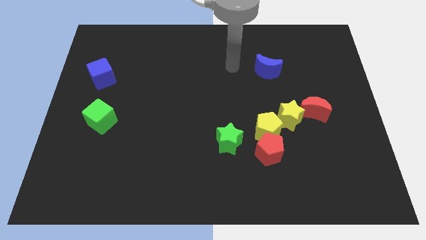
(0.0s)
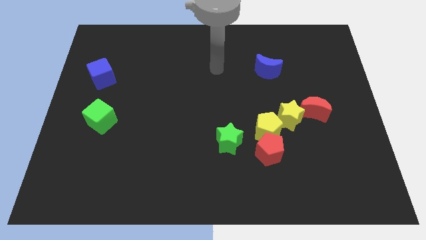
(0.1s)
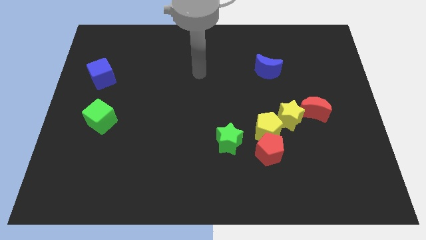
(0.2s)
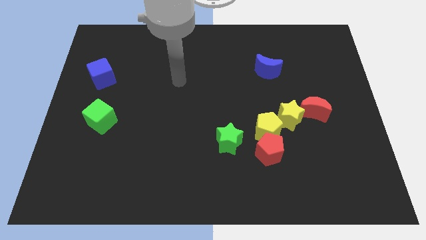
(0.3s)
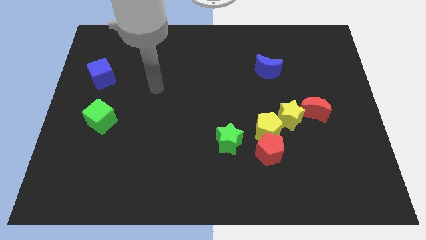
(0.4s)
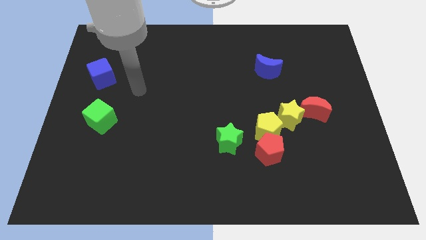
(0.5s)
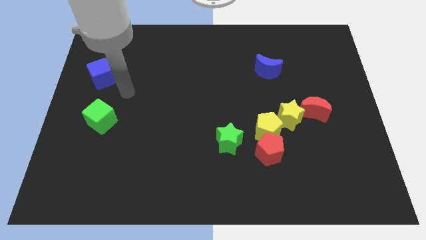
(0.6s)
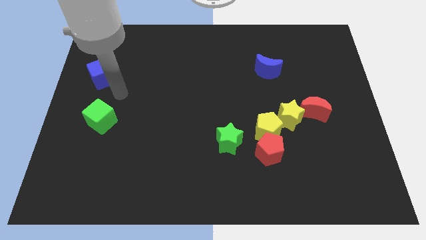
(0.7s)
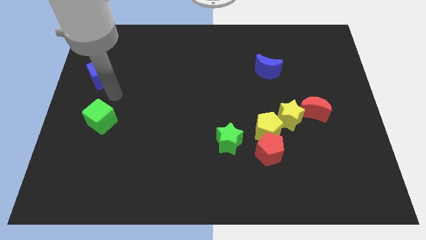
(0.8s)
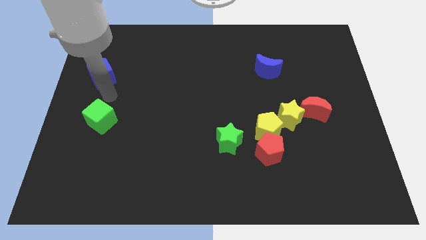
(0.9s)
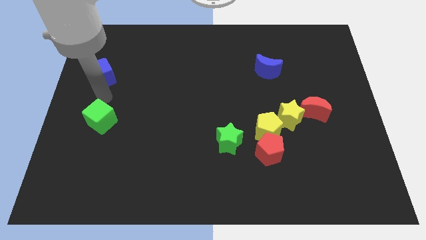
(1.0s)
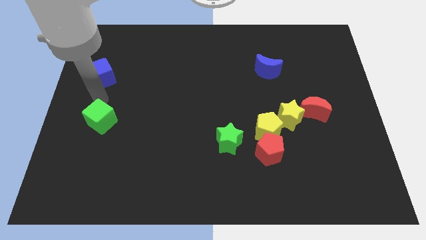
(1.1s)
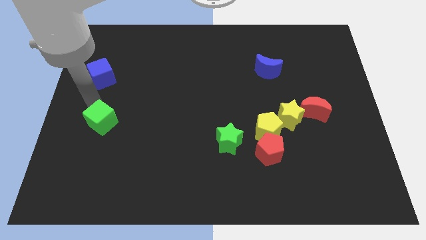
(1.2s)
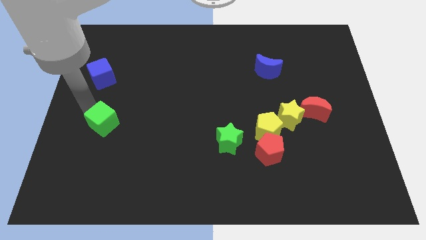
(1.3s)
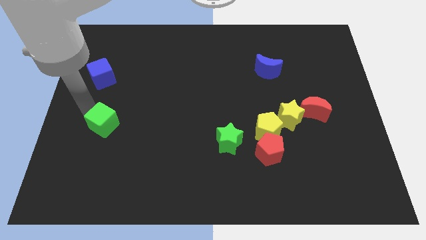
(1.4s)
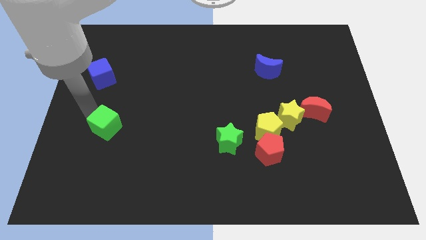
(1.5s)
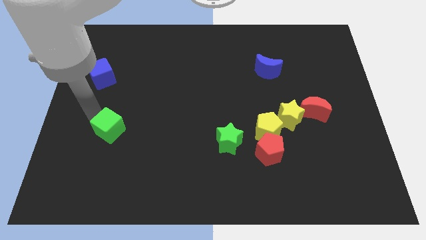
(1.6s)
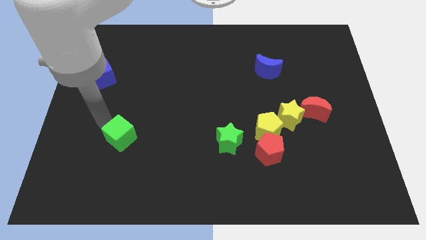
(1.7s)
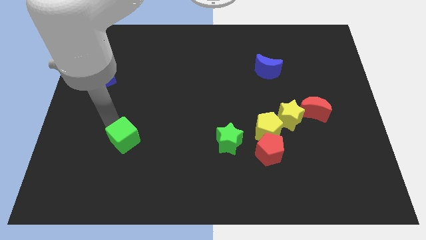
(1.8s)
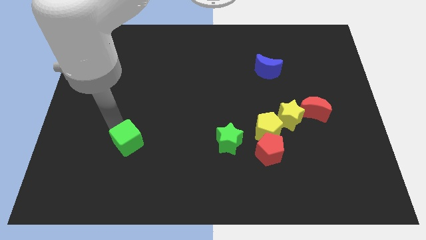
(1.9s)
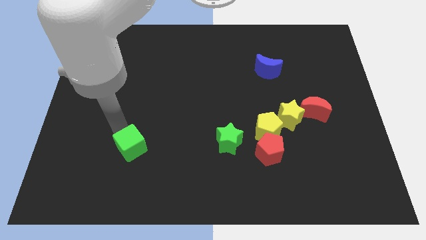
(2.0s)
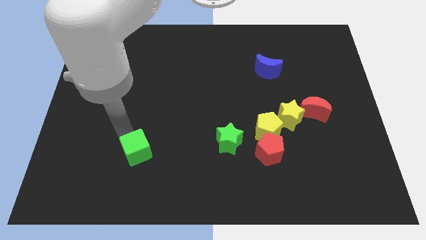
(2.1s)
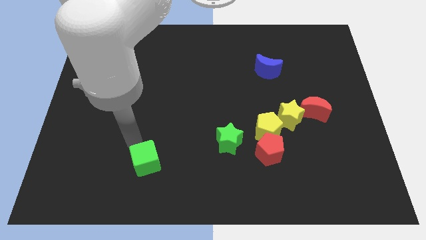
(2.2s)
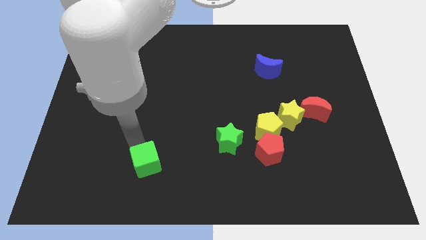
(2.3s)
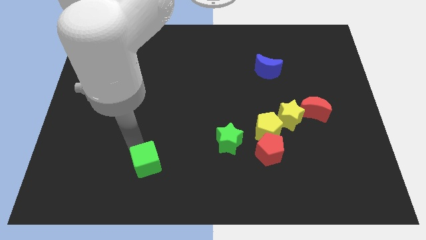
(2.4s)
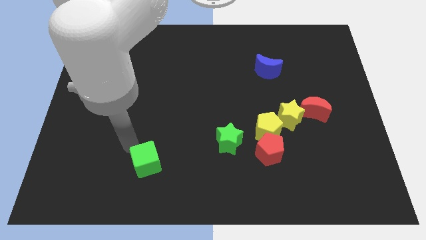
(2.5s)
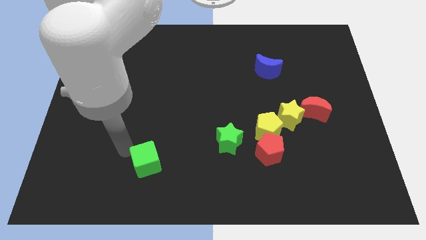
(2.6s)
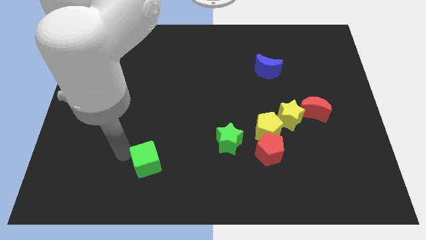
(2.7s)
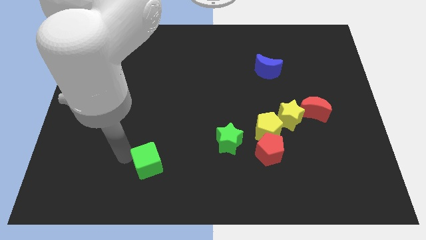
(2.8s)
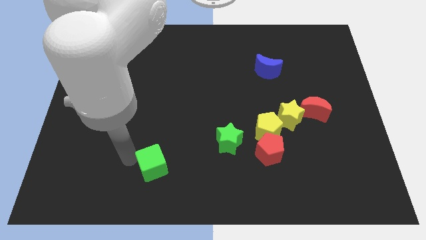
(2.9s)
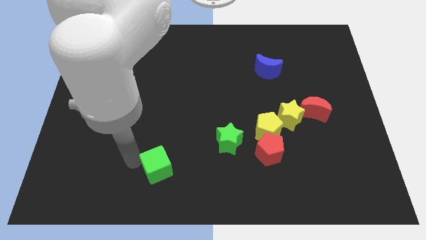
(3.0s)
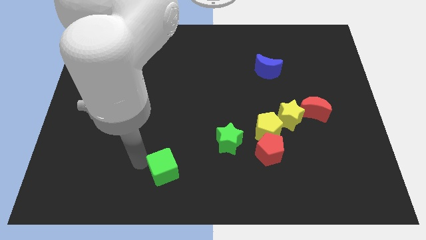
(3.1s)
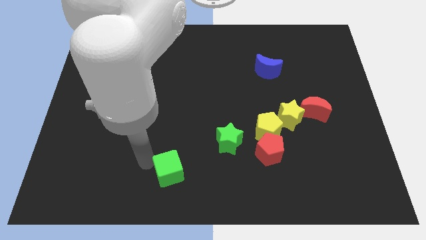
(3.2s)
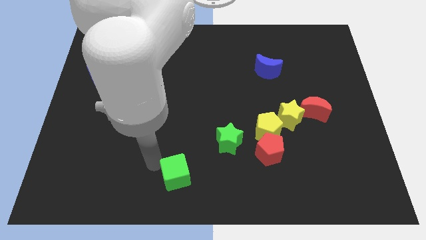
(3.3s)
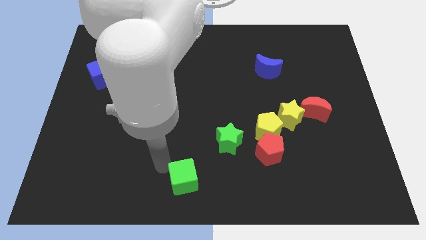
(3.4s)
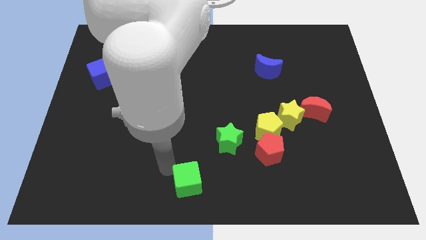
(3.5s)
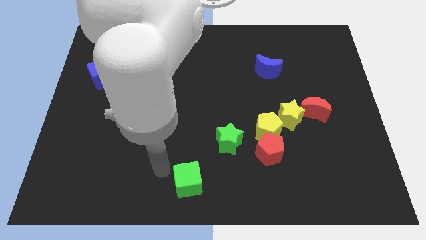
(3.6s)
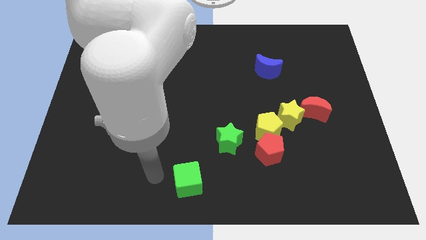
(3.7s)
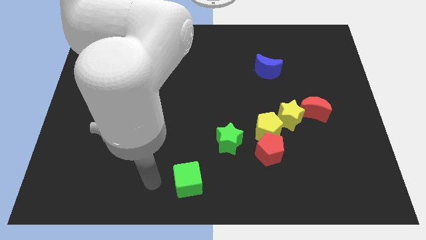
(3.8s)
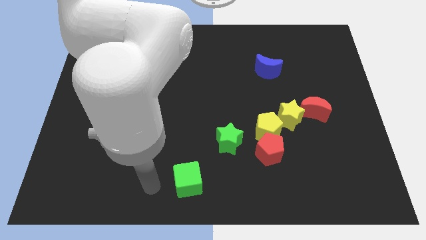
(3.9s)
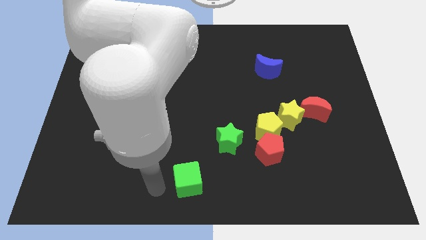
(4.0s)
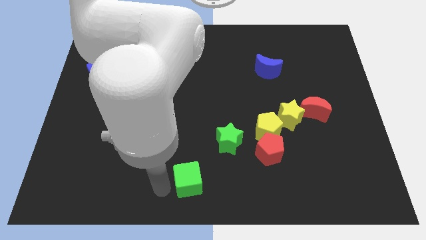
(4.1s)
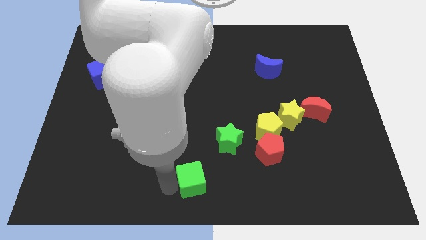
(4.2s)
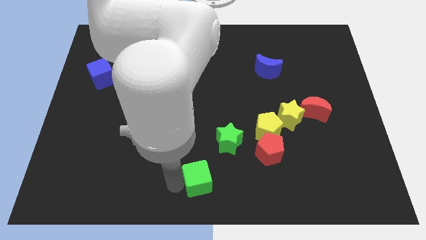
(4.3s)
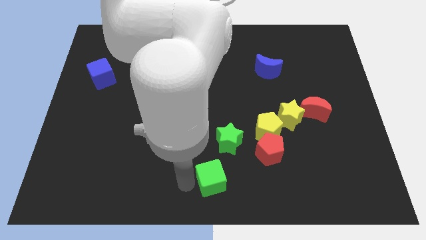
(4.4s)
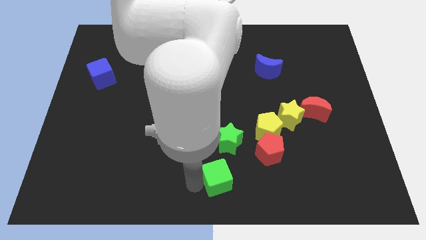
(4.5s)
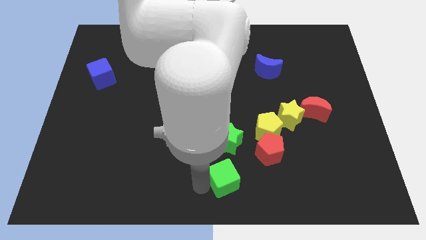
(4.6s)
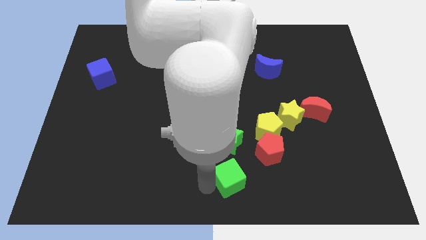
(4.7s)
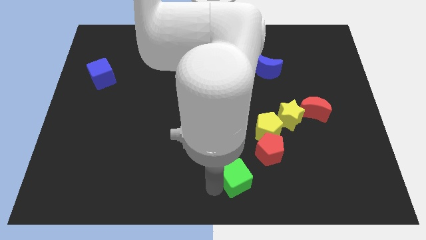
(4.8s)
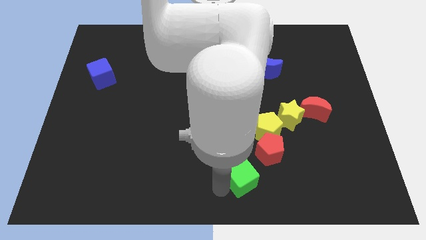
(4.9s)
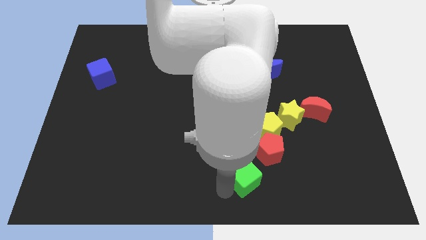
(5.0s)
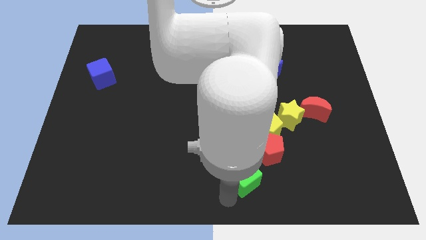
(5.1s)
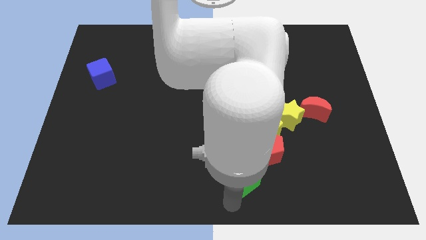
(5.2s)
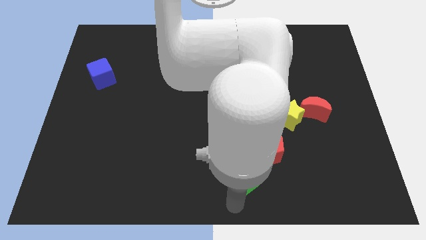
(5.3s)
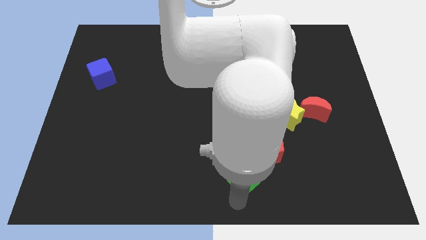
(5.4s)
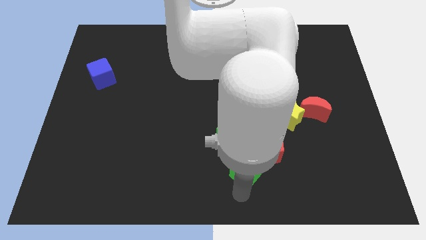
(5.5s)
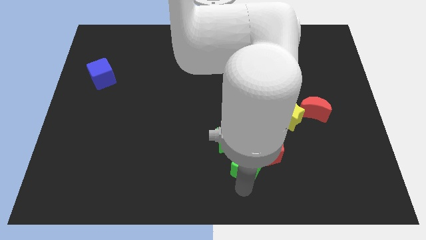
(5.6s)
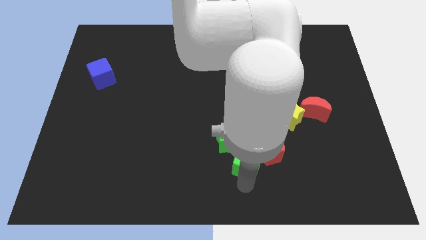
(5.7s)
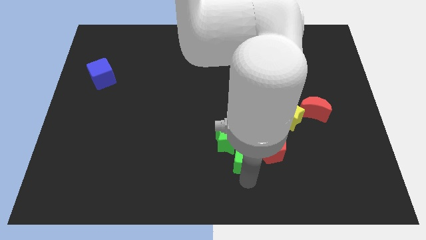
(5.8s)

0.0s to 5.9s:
push the green cube close to the red pentagon

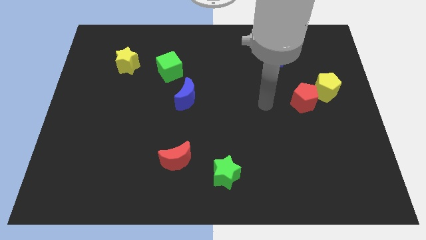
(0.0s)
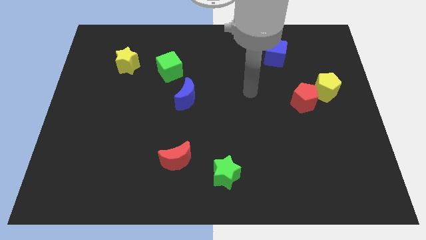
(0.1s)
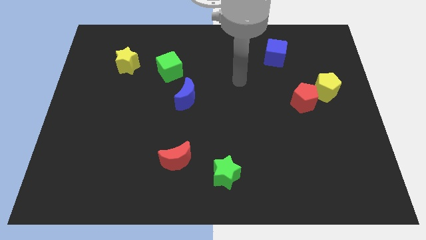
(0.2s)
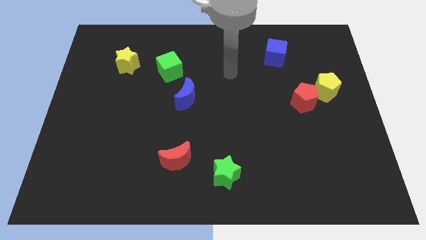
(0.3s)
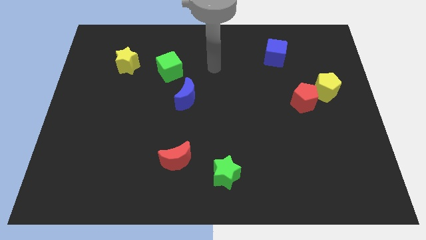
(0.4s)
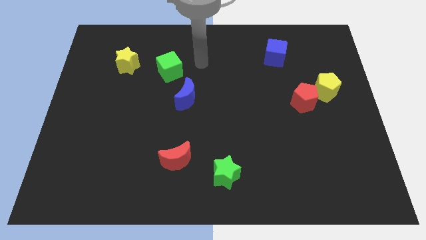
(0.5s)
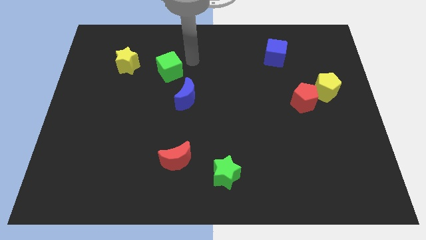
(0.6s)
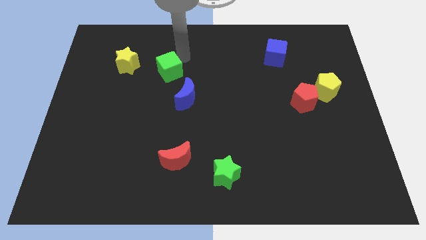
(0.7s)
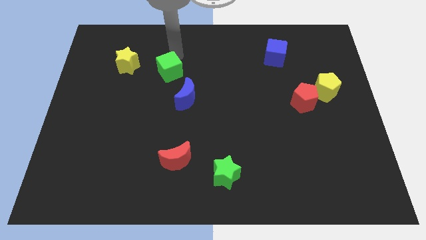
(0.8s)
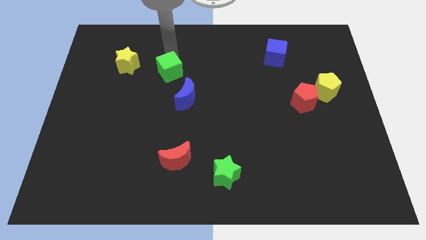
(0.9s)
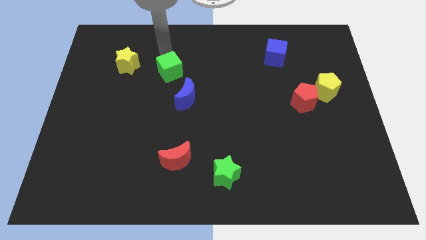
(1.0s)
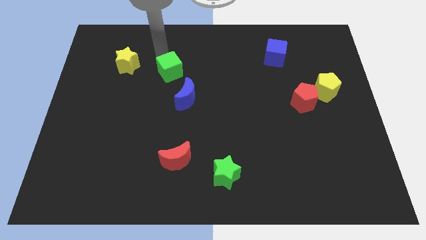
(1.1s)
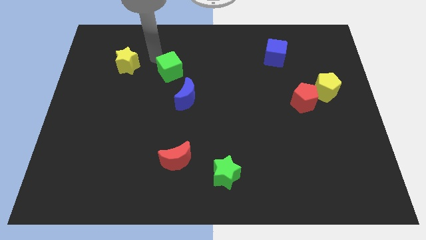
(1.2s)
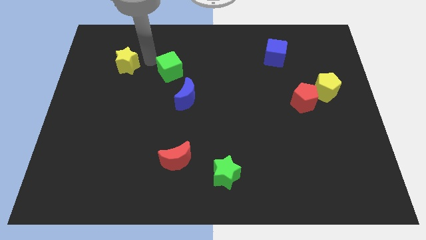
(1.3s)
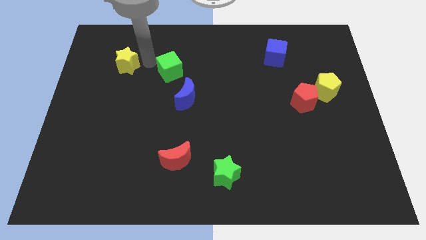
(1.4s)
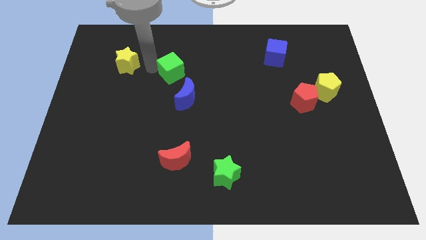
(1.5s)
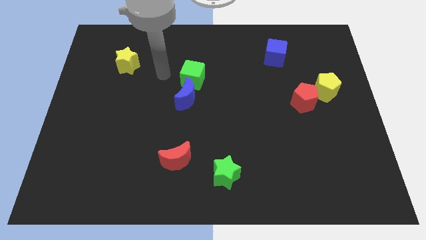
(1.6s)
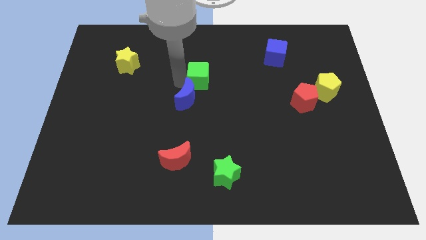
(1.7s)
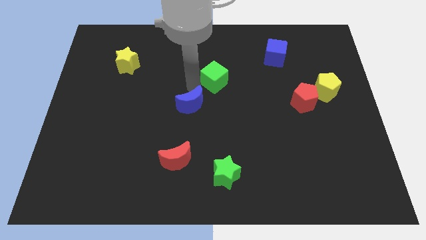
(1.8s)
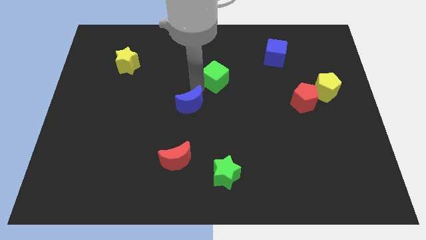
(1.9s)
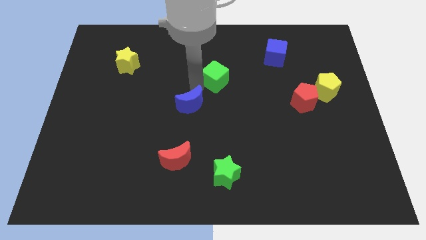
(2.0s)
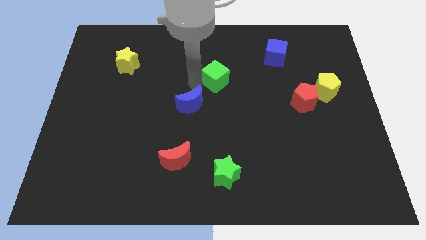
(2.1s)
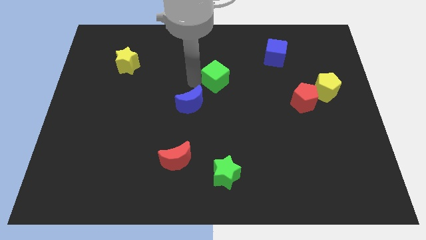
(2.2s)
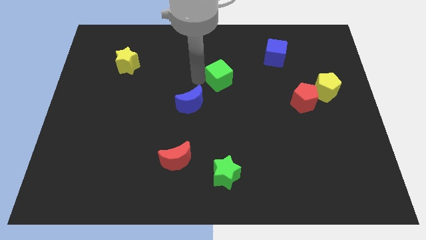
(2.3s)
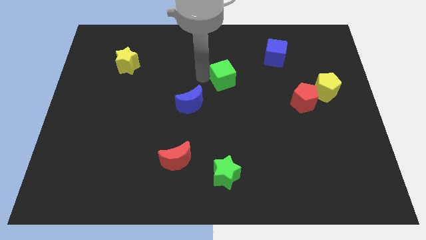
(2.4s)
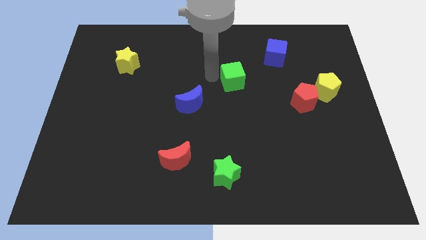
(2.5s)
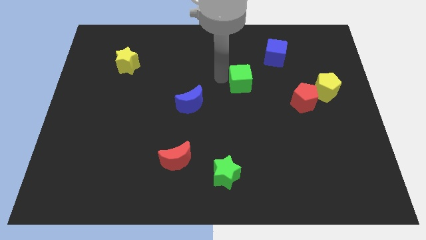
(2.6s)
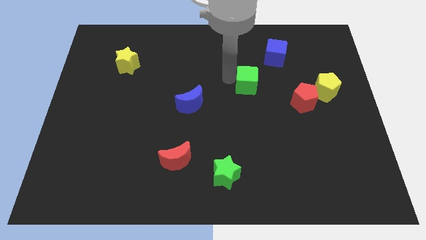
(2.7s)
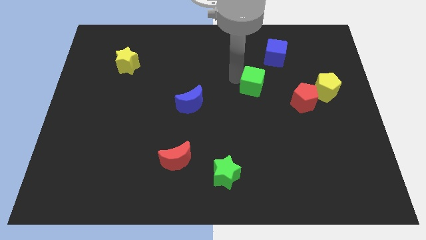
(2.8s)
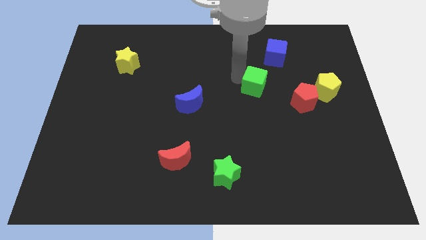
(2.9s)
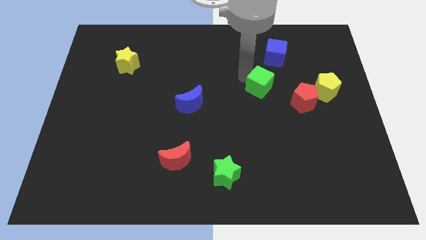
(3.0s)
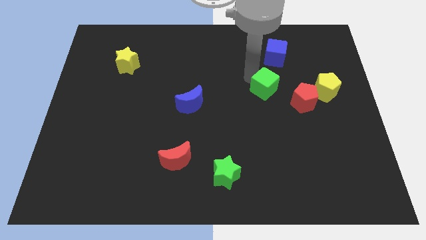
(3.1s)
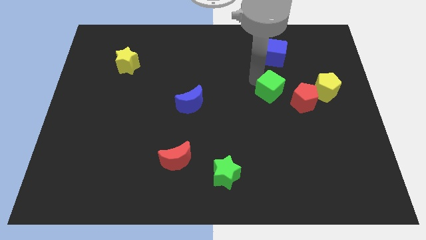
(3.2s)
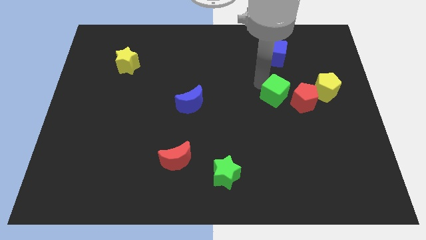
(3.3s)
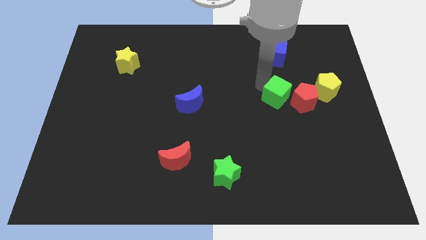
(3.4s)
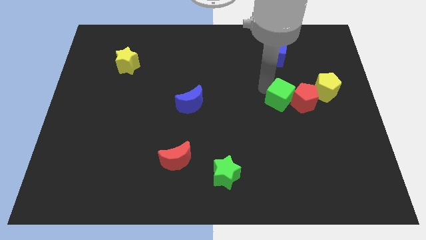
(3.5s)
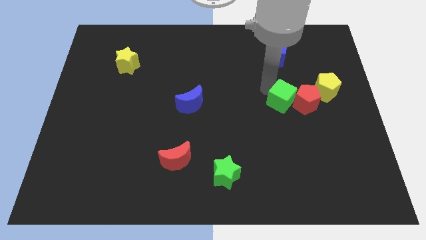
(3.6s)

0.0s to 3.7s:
push the green cube towards the red pentagon
